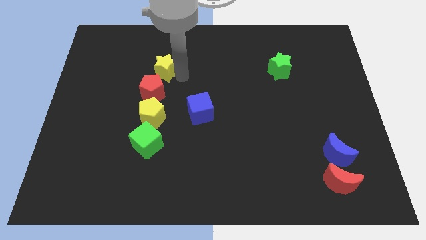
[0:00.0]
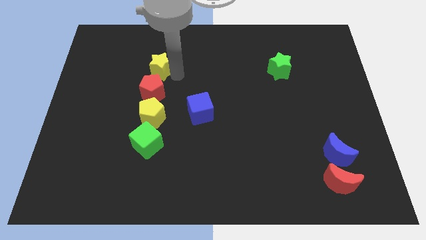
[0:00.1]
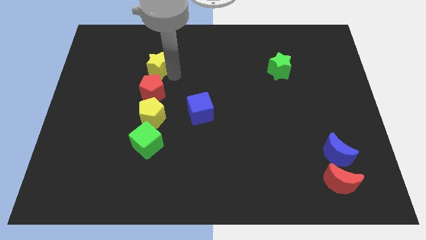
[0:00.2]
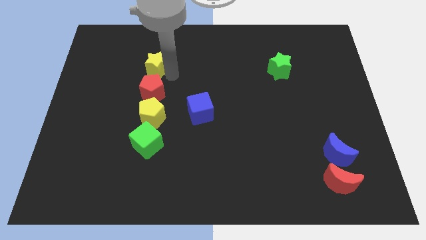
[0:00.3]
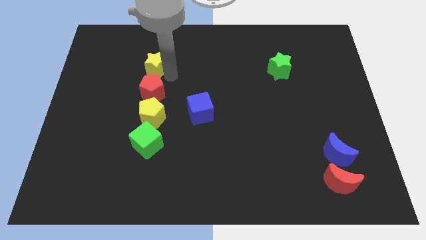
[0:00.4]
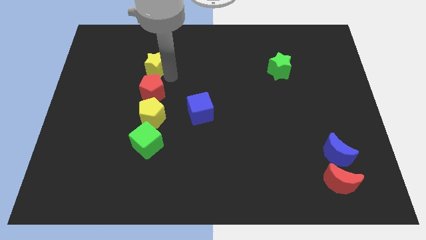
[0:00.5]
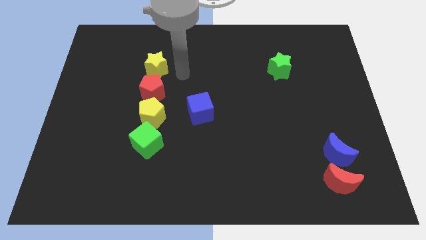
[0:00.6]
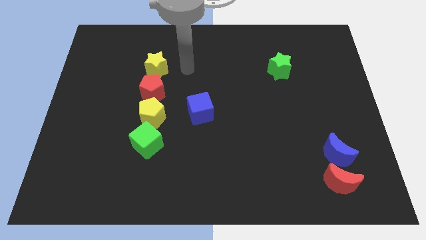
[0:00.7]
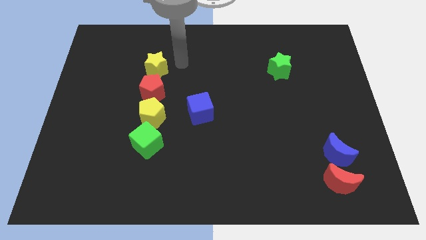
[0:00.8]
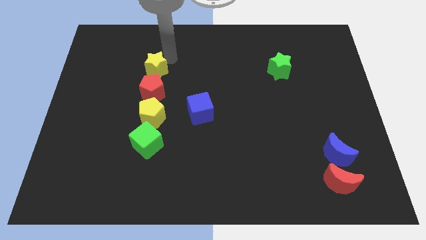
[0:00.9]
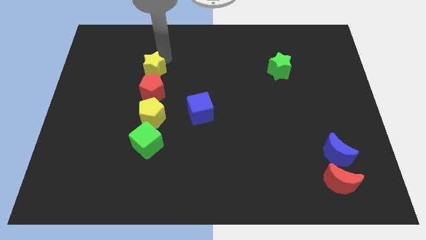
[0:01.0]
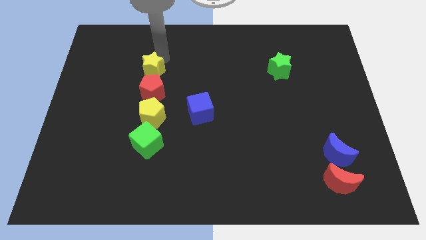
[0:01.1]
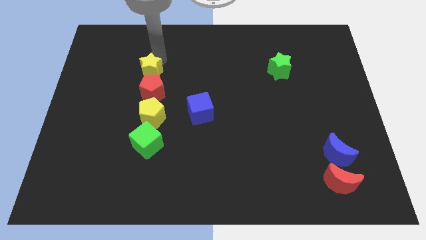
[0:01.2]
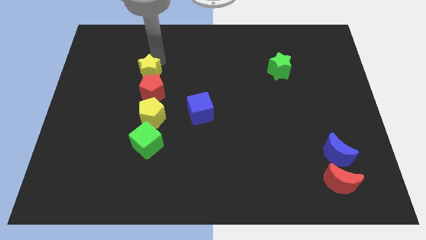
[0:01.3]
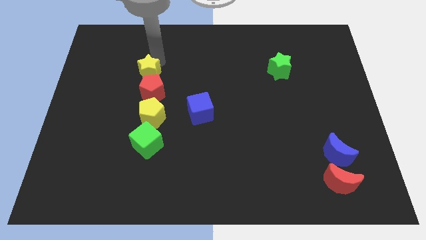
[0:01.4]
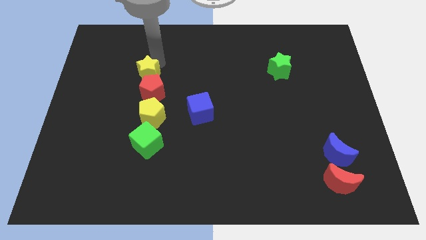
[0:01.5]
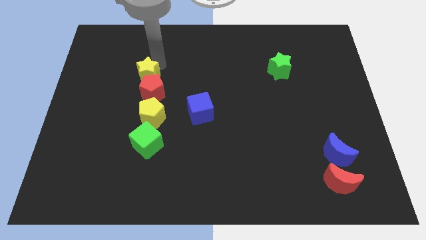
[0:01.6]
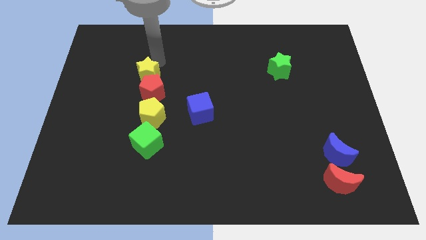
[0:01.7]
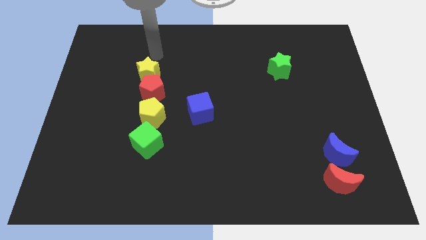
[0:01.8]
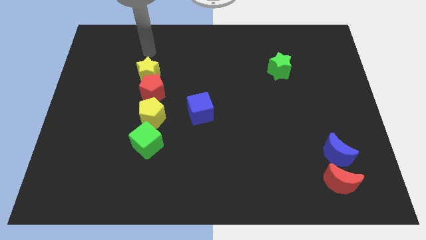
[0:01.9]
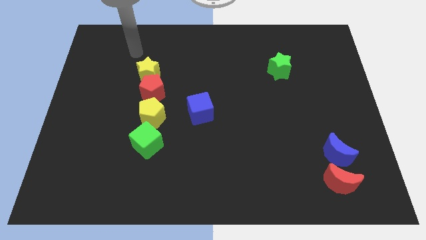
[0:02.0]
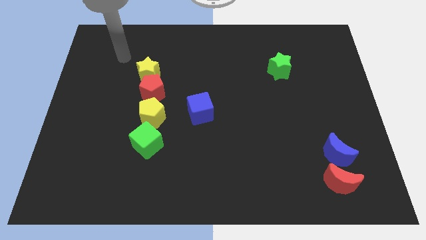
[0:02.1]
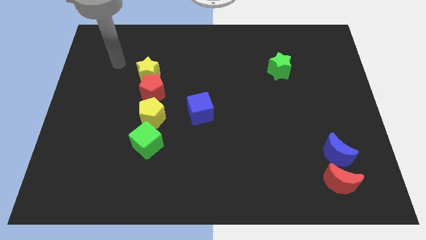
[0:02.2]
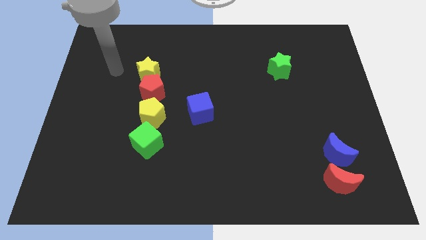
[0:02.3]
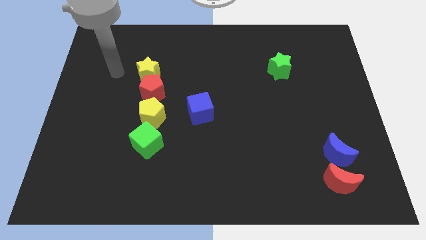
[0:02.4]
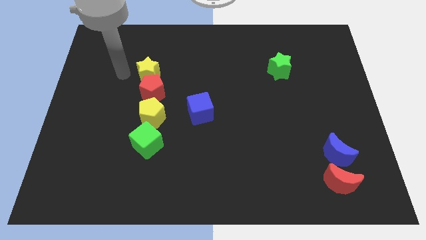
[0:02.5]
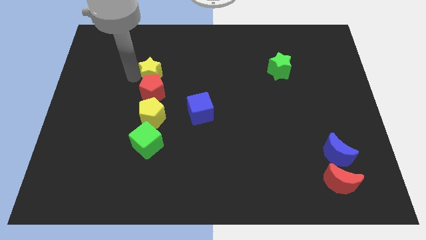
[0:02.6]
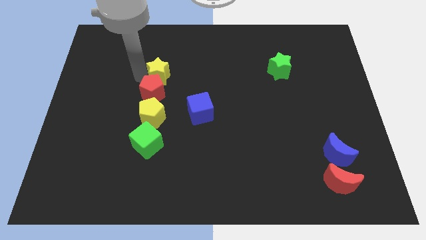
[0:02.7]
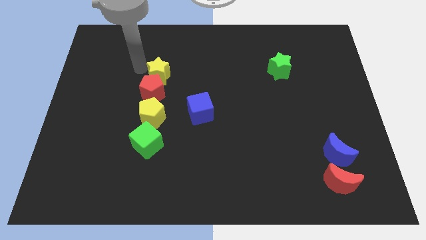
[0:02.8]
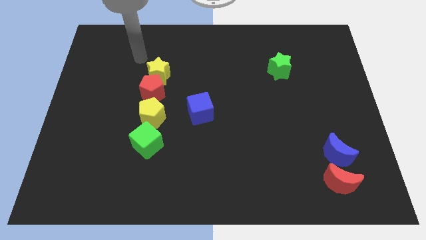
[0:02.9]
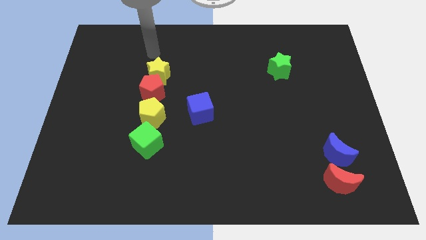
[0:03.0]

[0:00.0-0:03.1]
adjust the yellow star at the top side of the red pentagon

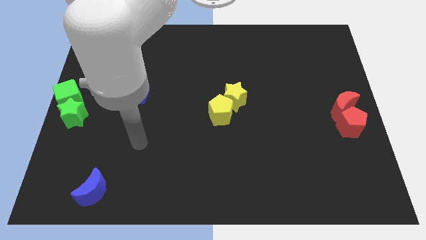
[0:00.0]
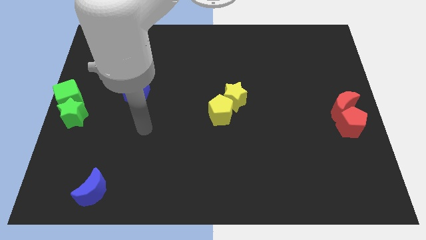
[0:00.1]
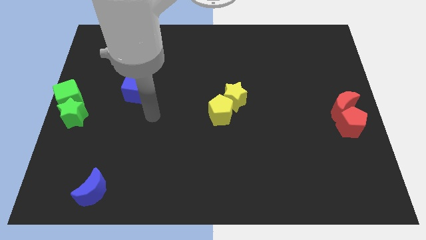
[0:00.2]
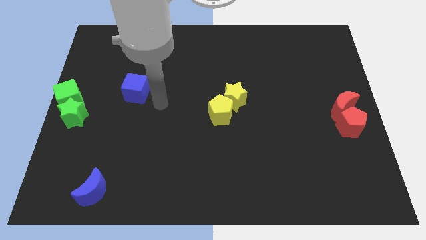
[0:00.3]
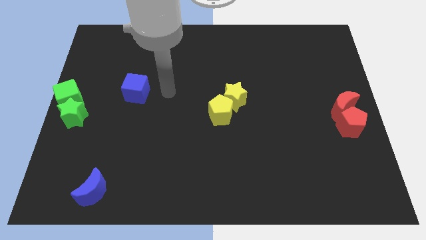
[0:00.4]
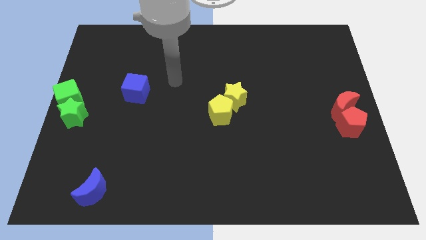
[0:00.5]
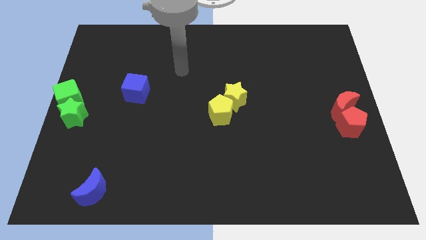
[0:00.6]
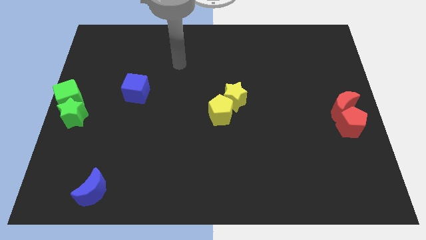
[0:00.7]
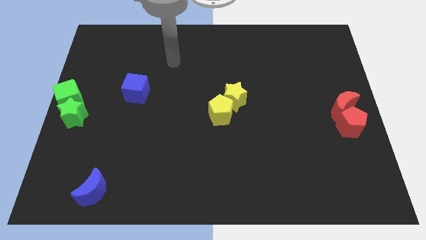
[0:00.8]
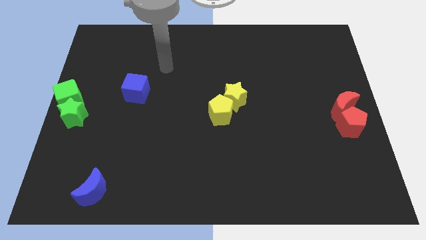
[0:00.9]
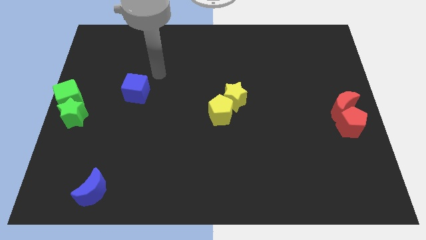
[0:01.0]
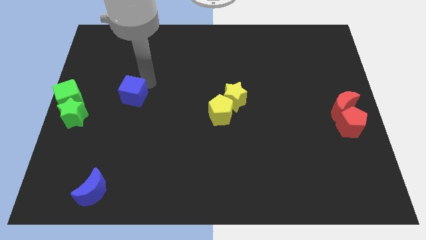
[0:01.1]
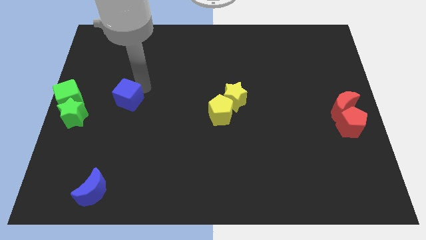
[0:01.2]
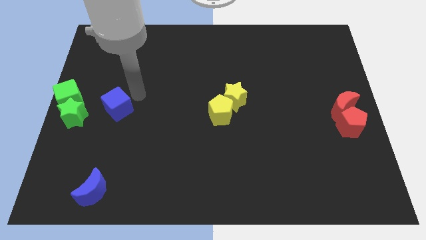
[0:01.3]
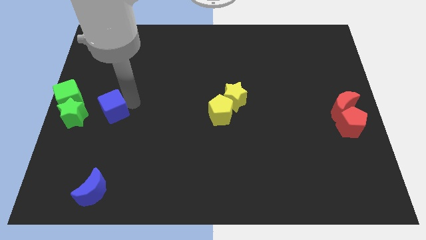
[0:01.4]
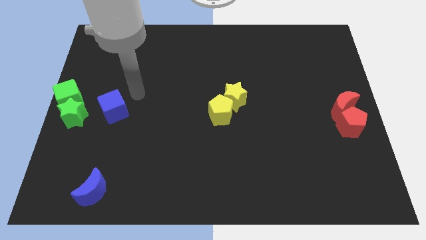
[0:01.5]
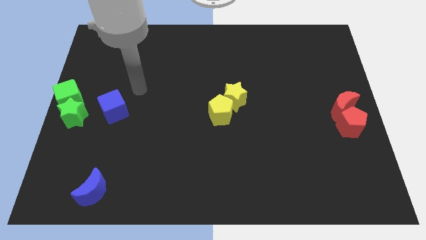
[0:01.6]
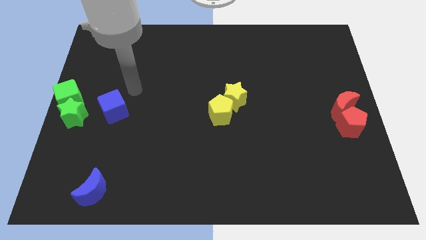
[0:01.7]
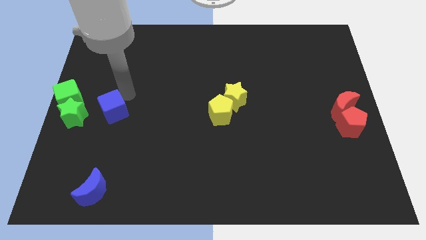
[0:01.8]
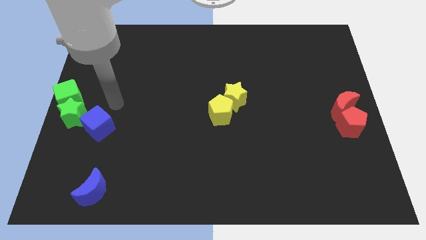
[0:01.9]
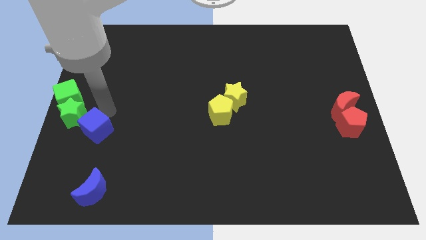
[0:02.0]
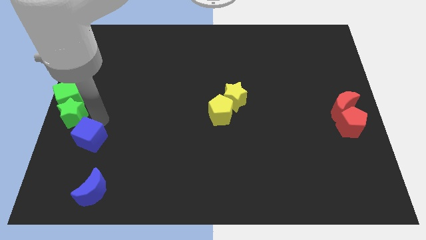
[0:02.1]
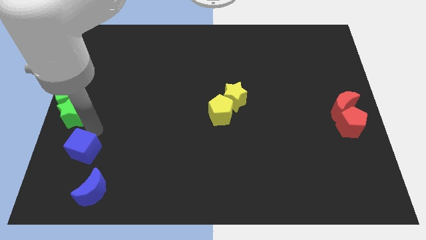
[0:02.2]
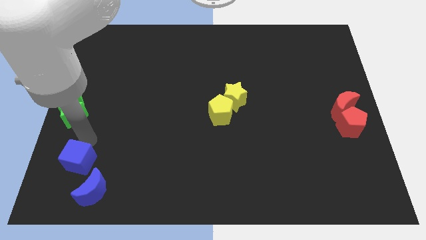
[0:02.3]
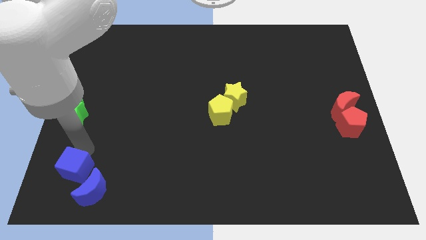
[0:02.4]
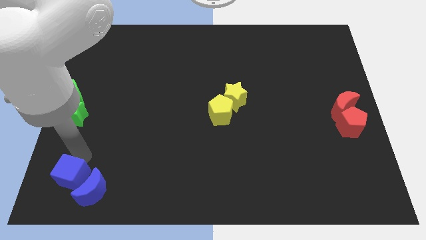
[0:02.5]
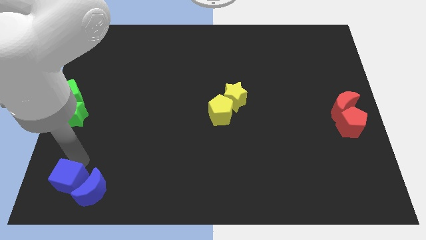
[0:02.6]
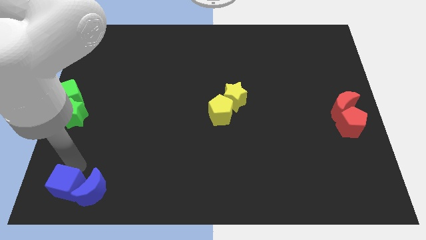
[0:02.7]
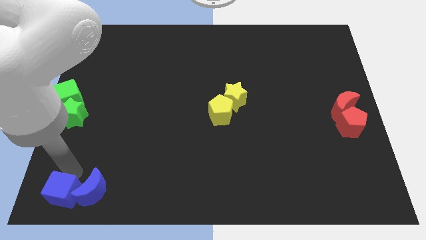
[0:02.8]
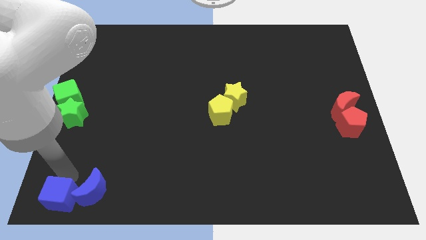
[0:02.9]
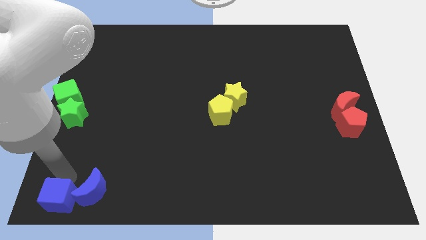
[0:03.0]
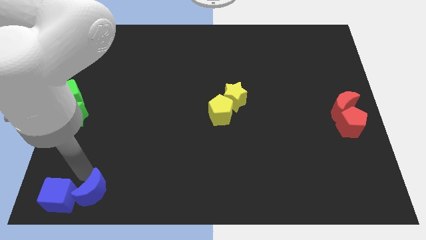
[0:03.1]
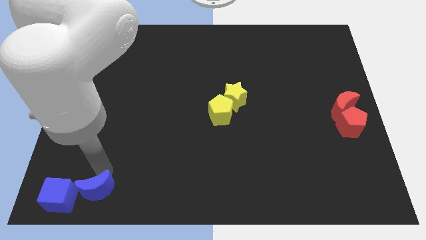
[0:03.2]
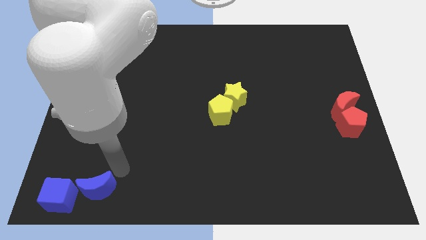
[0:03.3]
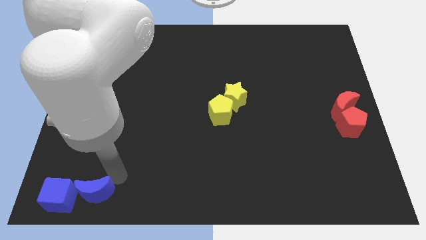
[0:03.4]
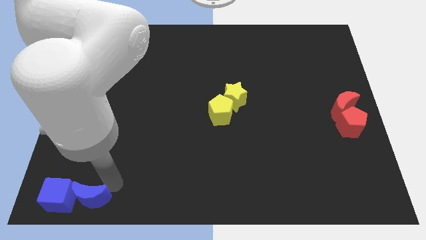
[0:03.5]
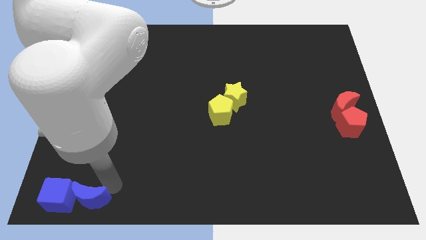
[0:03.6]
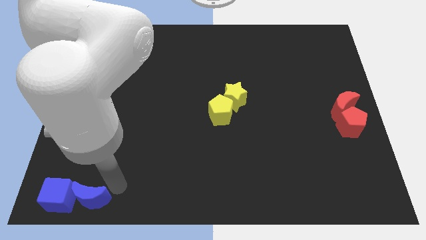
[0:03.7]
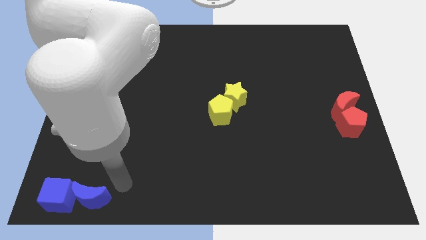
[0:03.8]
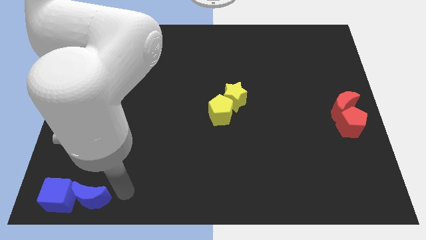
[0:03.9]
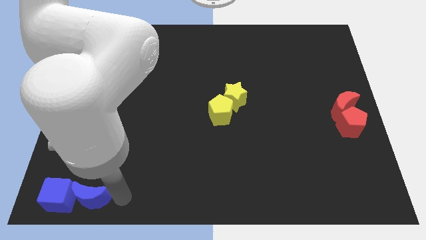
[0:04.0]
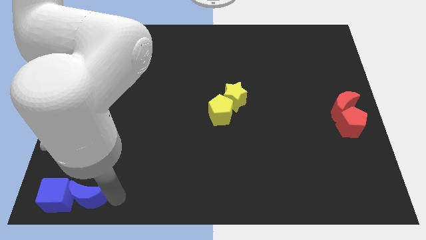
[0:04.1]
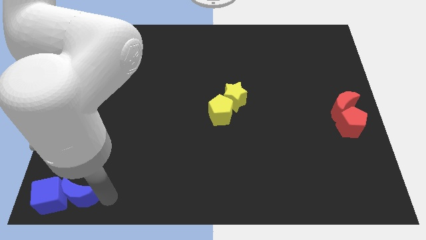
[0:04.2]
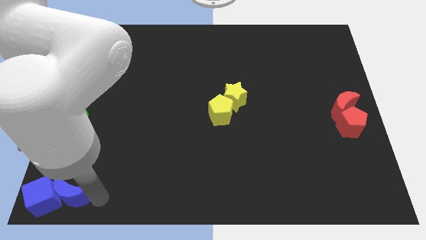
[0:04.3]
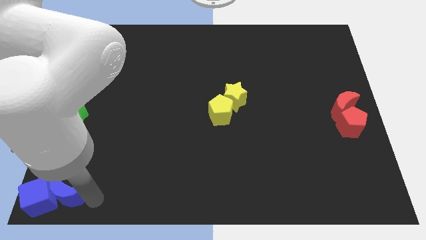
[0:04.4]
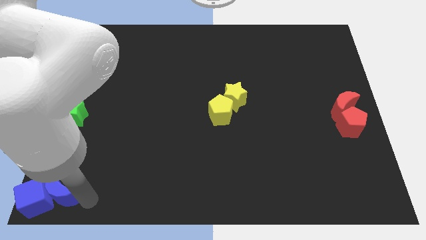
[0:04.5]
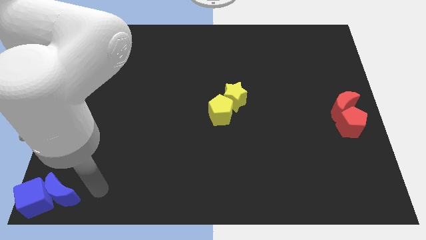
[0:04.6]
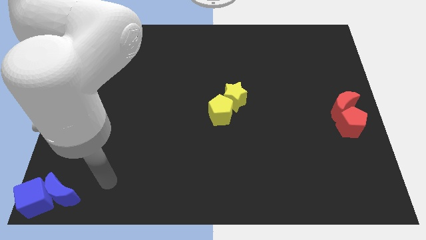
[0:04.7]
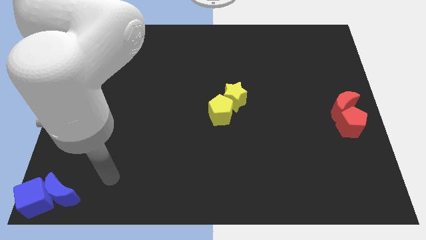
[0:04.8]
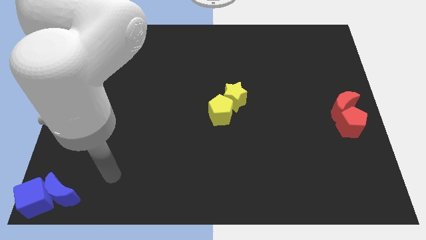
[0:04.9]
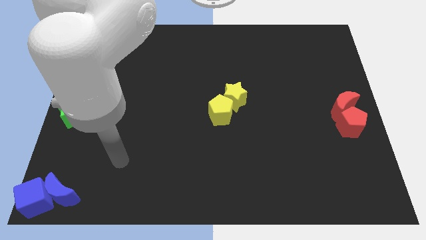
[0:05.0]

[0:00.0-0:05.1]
move the blue blocks to the bottom left corner

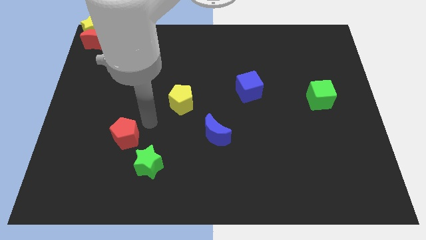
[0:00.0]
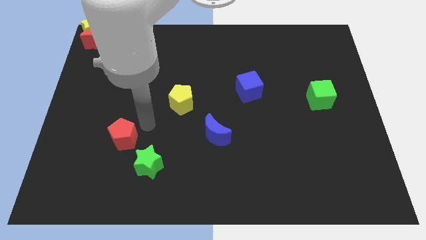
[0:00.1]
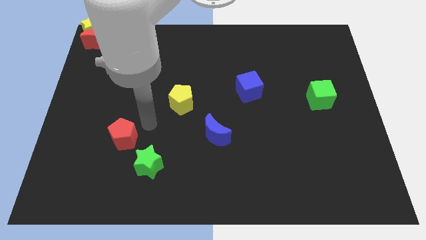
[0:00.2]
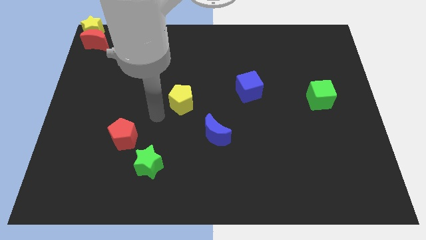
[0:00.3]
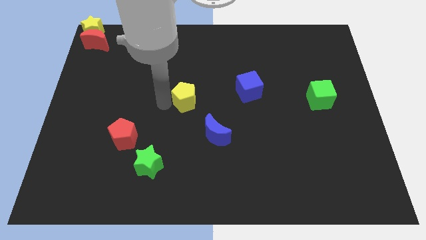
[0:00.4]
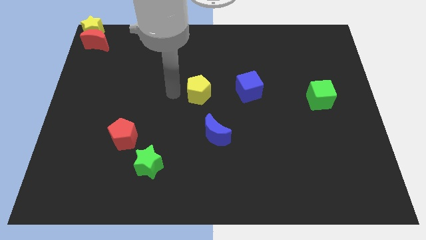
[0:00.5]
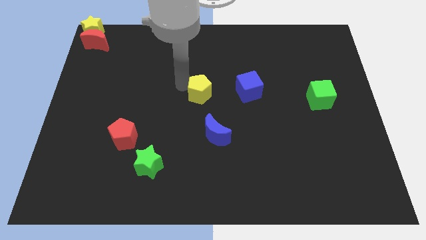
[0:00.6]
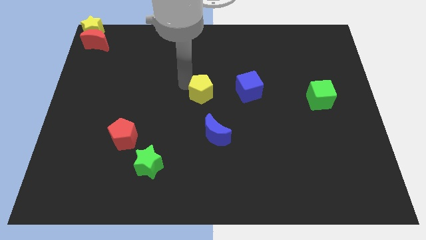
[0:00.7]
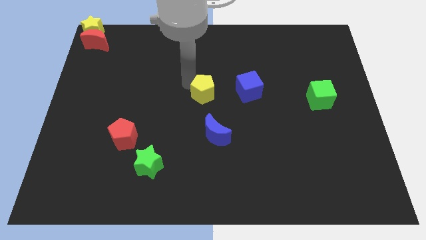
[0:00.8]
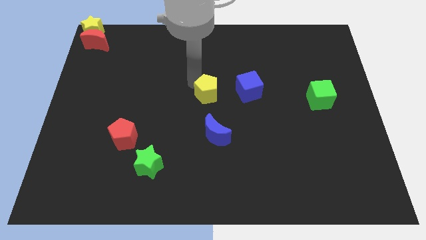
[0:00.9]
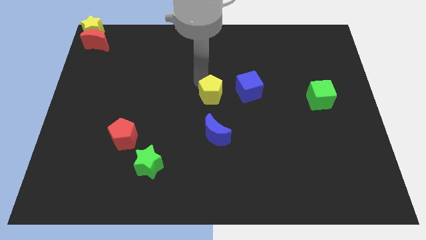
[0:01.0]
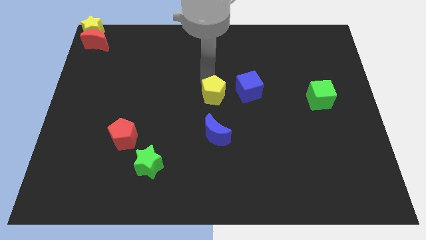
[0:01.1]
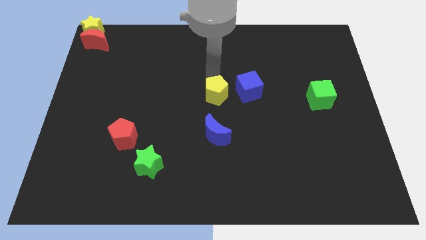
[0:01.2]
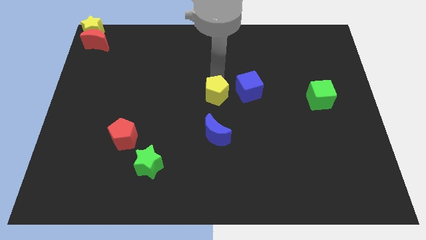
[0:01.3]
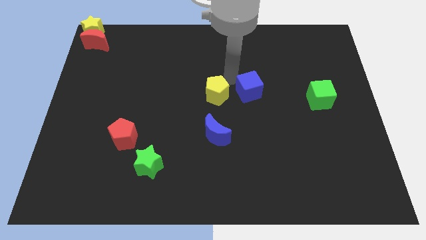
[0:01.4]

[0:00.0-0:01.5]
put the yellow pentagon vertically above the blue moon
